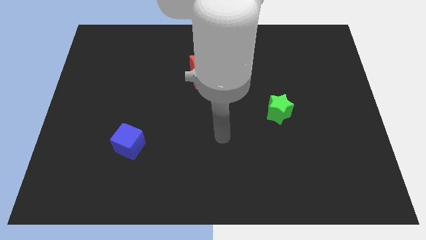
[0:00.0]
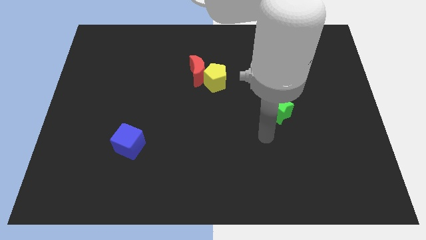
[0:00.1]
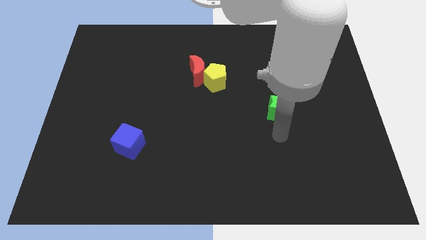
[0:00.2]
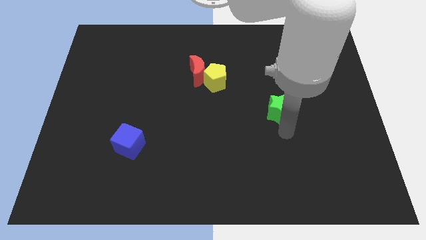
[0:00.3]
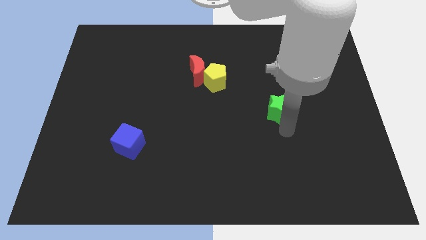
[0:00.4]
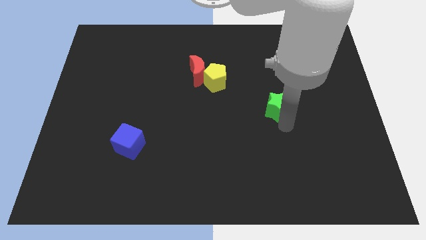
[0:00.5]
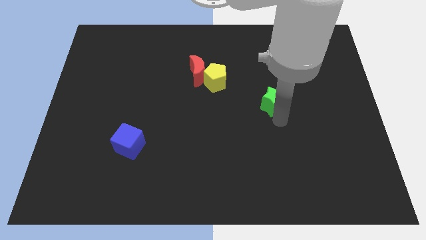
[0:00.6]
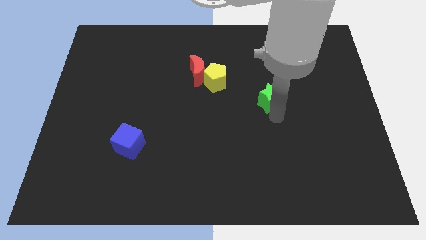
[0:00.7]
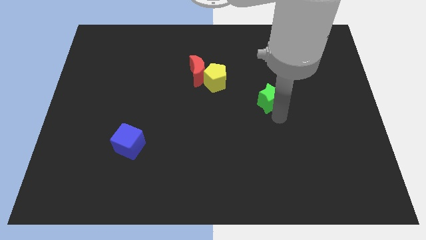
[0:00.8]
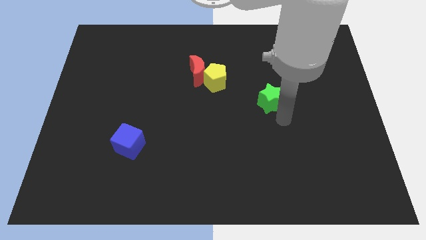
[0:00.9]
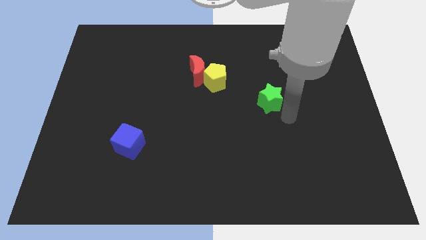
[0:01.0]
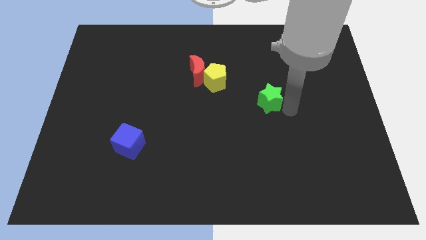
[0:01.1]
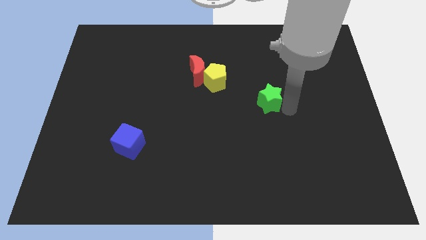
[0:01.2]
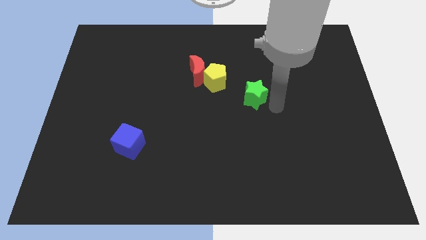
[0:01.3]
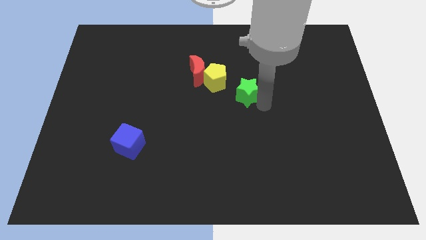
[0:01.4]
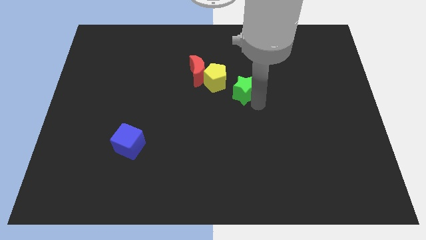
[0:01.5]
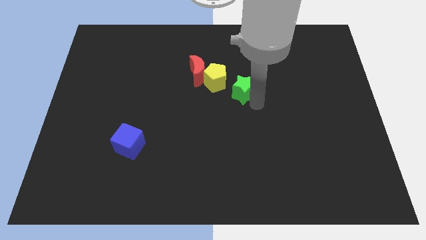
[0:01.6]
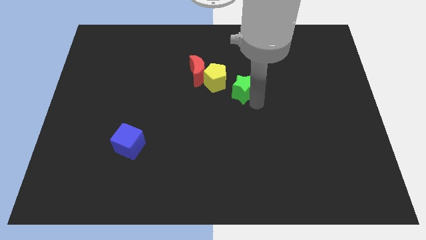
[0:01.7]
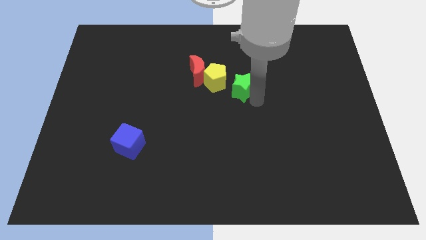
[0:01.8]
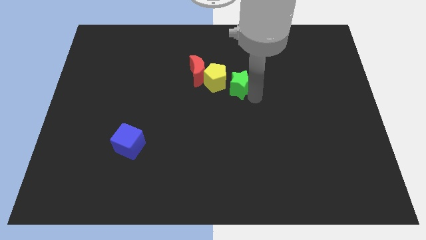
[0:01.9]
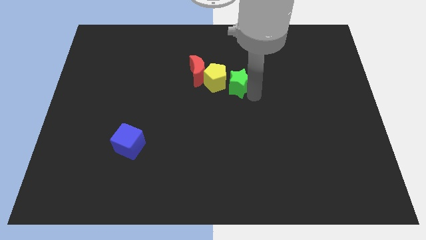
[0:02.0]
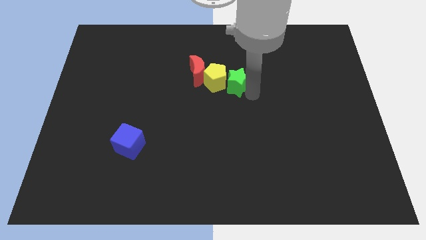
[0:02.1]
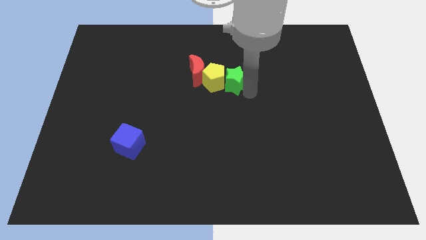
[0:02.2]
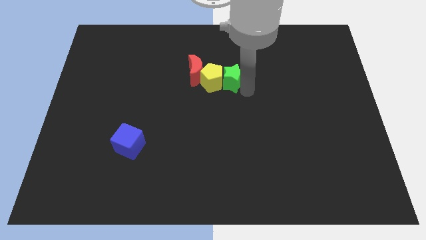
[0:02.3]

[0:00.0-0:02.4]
put the star to the pentagon

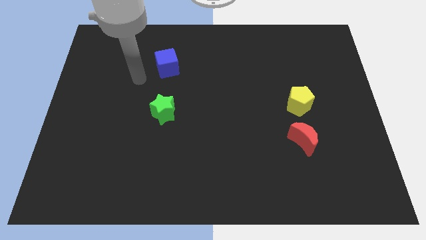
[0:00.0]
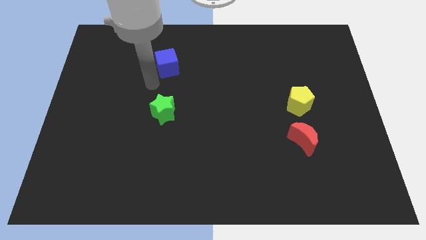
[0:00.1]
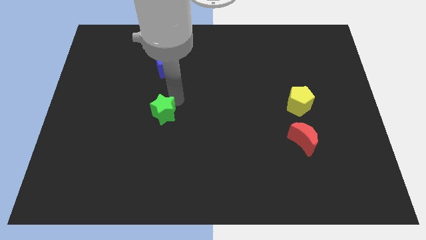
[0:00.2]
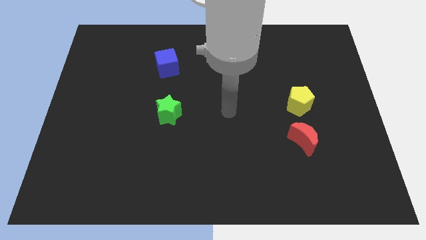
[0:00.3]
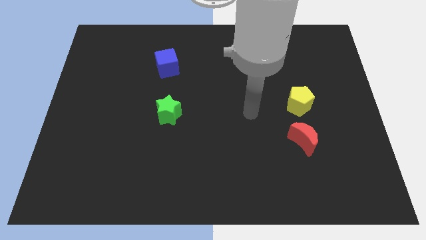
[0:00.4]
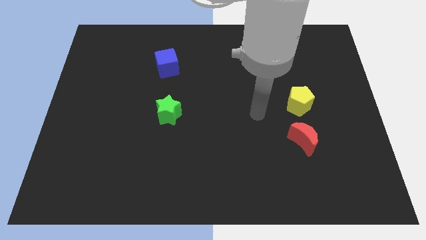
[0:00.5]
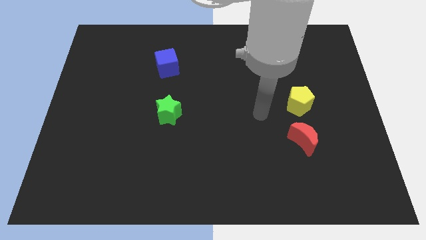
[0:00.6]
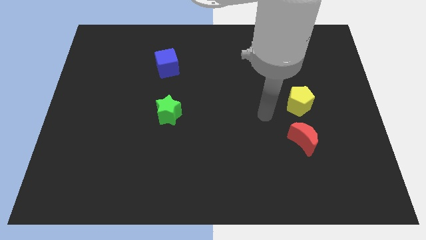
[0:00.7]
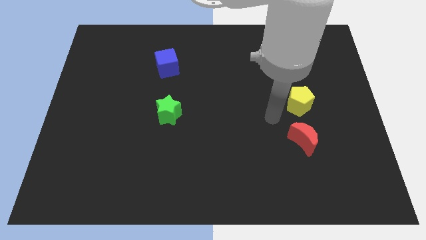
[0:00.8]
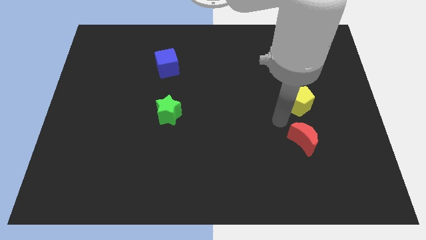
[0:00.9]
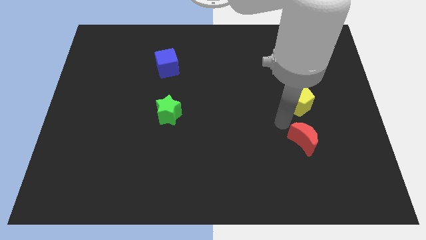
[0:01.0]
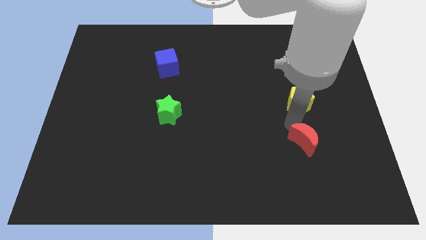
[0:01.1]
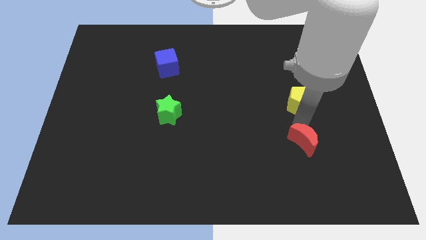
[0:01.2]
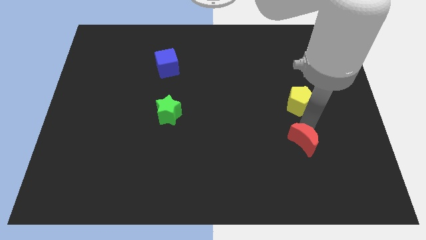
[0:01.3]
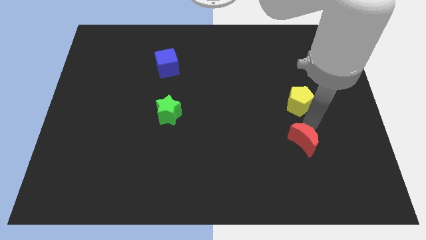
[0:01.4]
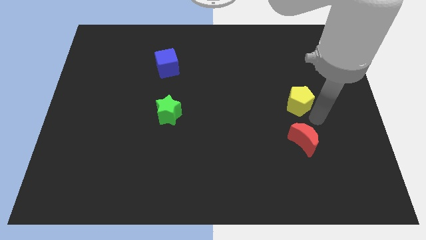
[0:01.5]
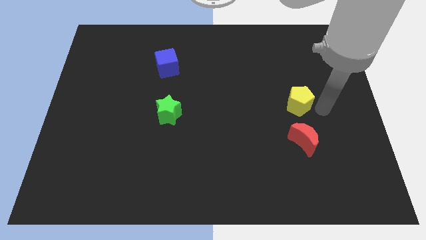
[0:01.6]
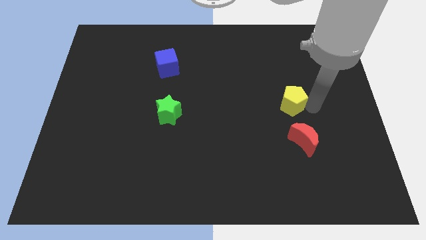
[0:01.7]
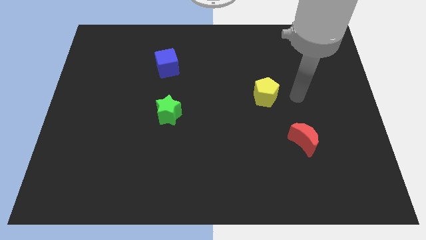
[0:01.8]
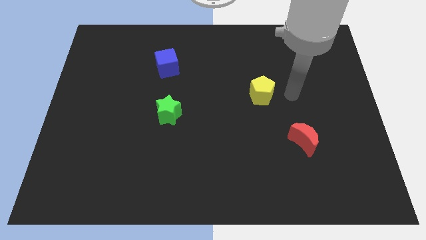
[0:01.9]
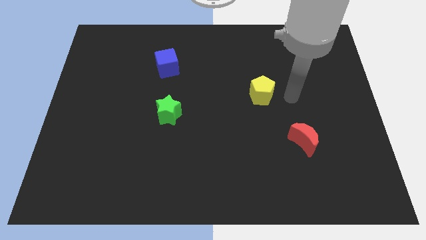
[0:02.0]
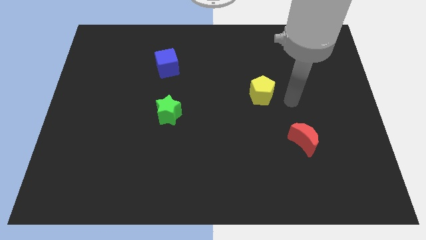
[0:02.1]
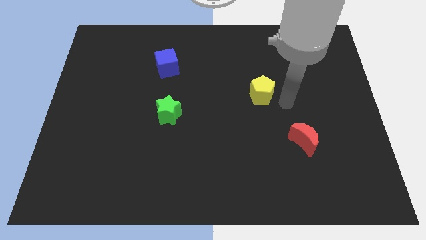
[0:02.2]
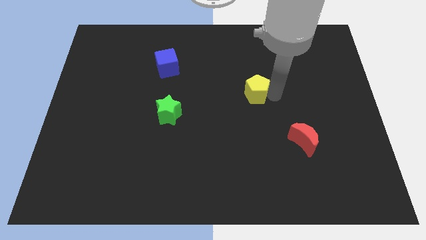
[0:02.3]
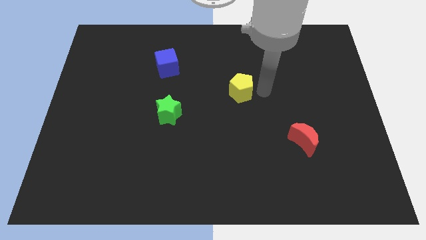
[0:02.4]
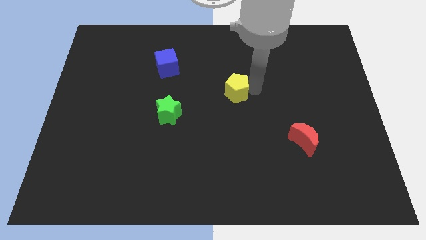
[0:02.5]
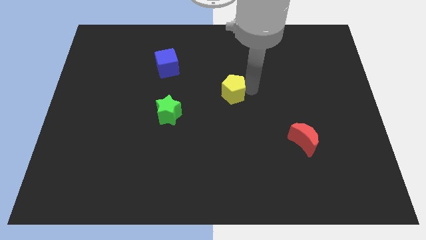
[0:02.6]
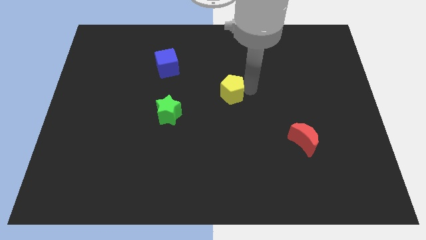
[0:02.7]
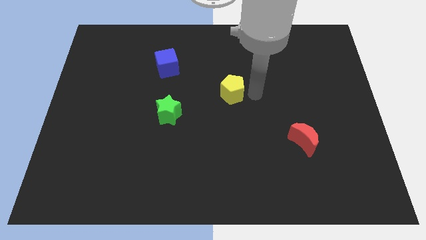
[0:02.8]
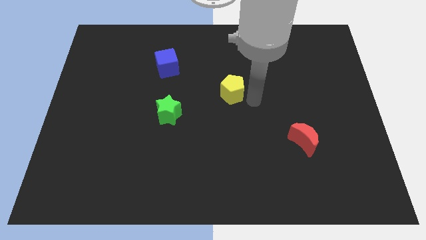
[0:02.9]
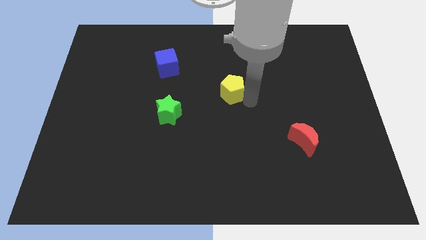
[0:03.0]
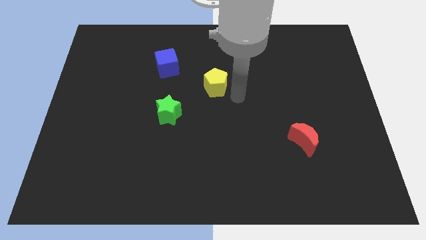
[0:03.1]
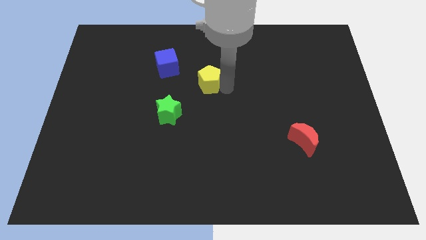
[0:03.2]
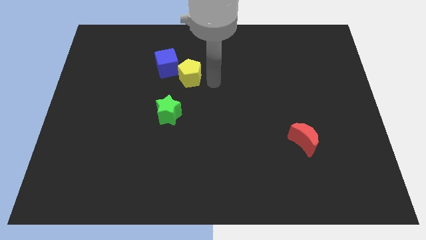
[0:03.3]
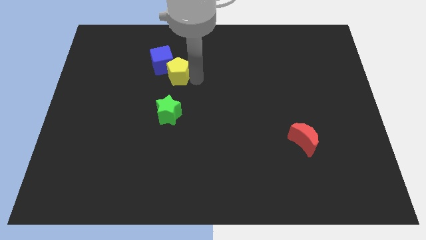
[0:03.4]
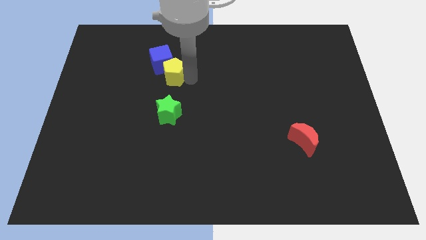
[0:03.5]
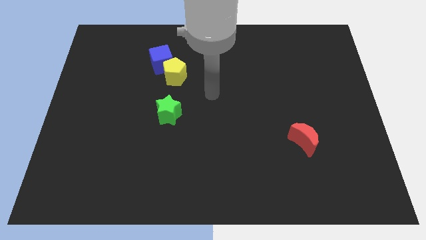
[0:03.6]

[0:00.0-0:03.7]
put the pentagon close to the cube

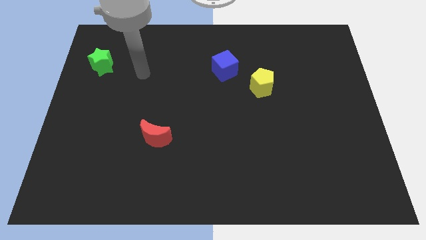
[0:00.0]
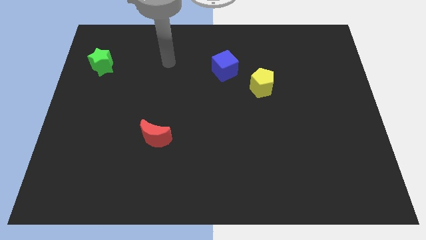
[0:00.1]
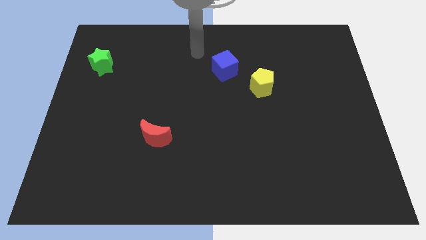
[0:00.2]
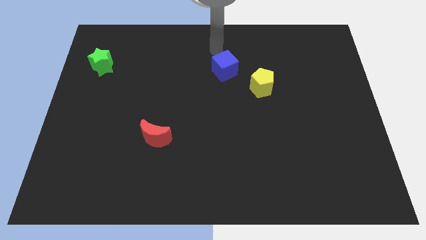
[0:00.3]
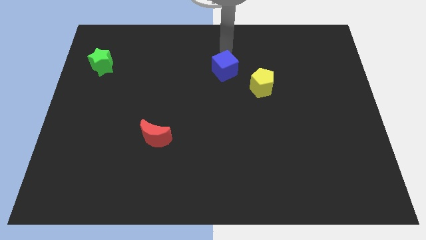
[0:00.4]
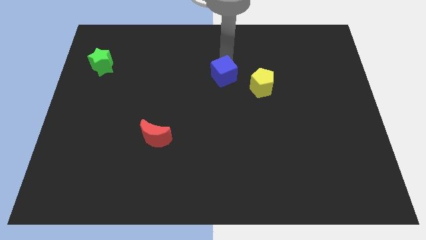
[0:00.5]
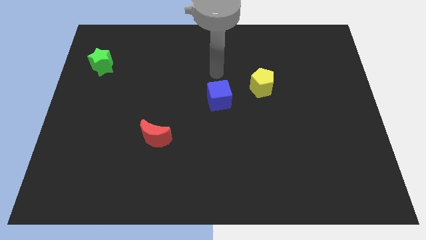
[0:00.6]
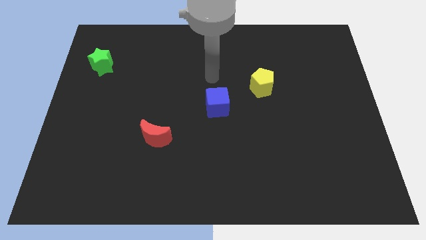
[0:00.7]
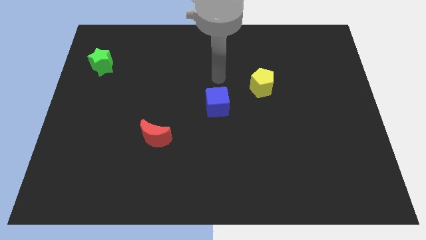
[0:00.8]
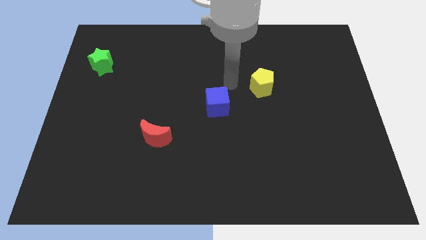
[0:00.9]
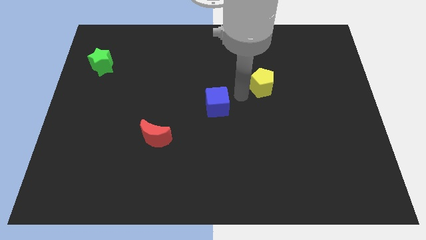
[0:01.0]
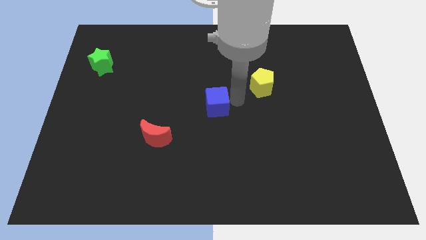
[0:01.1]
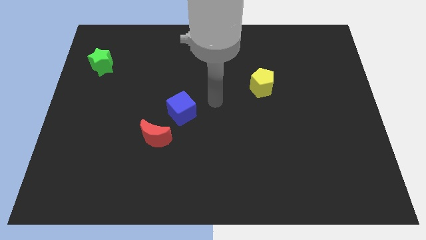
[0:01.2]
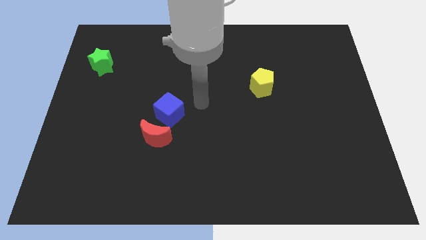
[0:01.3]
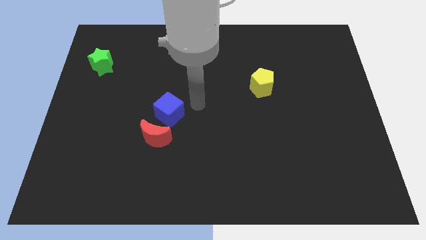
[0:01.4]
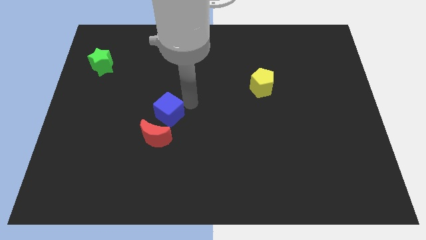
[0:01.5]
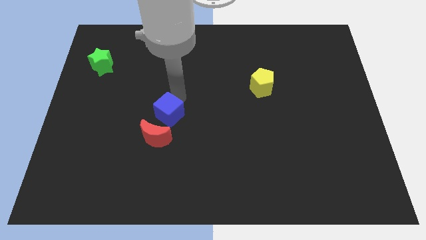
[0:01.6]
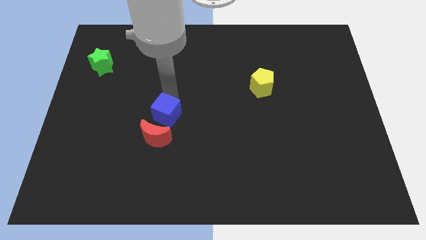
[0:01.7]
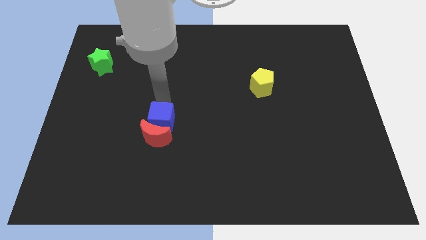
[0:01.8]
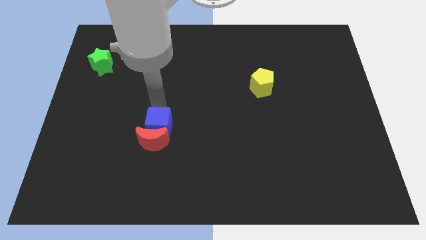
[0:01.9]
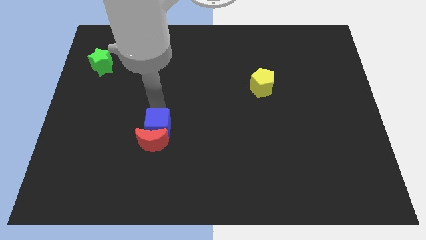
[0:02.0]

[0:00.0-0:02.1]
slide the blue cube towards the red block

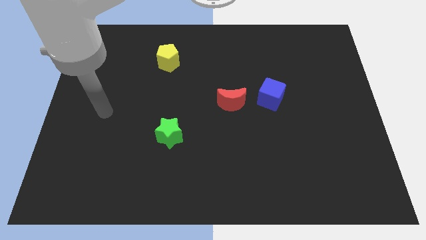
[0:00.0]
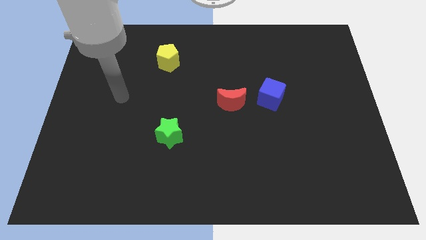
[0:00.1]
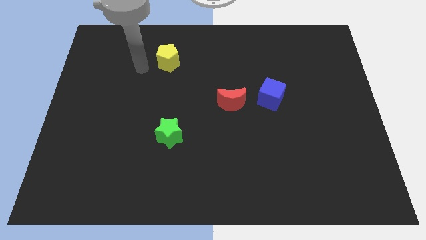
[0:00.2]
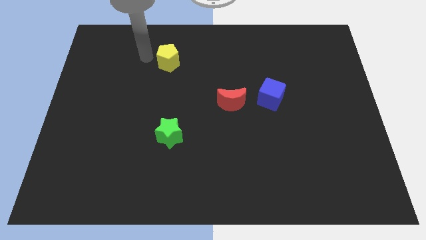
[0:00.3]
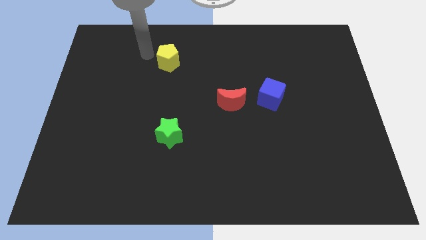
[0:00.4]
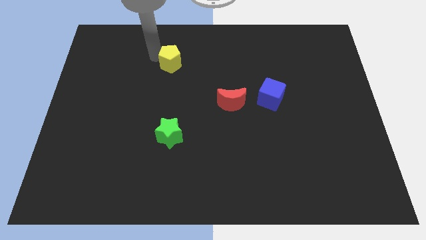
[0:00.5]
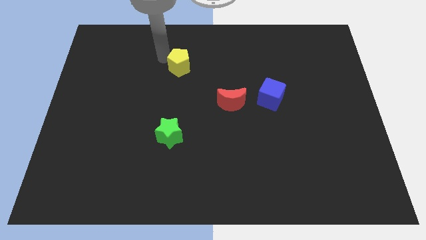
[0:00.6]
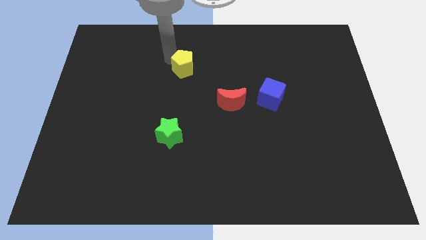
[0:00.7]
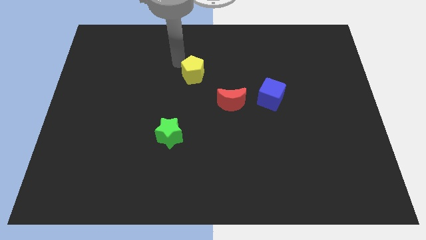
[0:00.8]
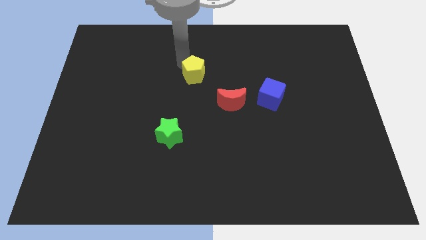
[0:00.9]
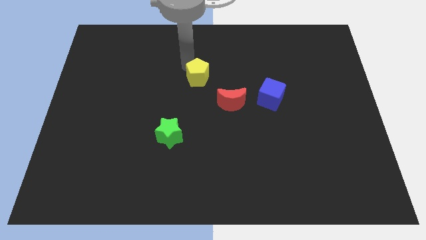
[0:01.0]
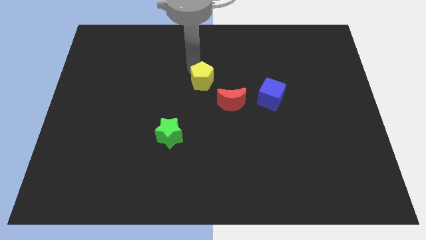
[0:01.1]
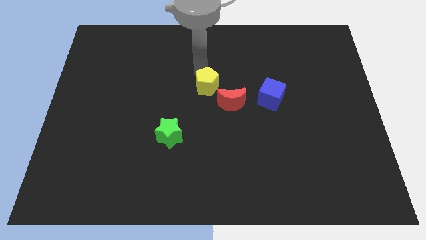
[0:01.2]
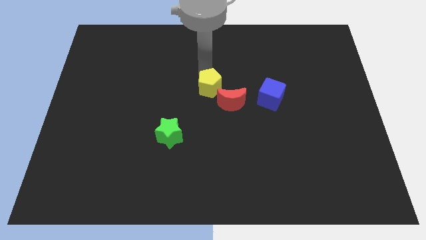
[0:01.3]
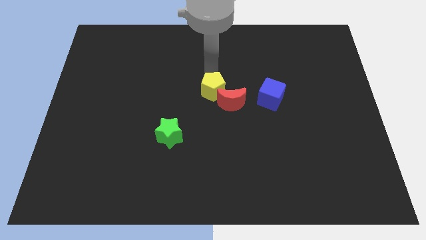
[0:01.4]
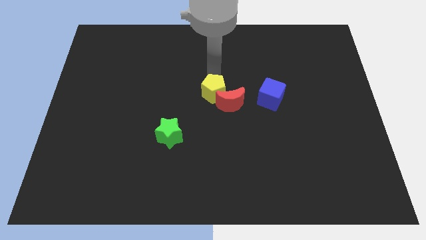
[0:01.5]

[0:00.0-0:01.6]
put the pentagon towards the red moon
